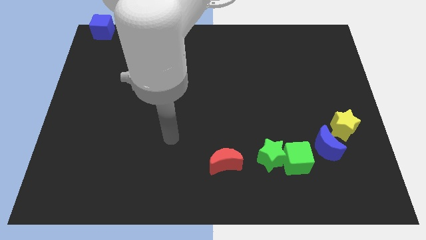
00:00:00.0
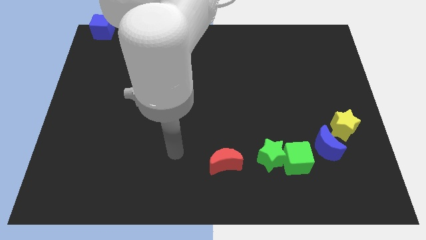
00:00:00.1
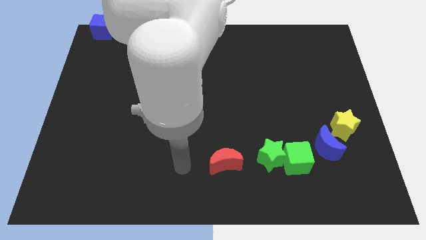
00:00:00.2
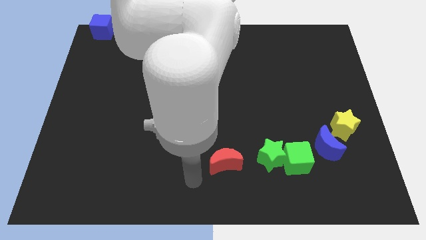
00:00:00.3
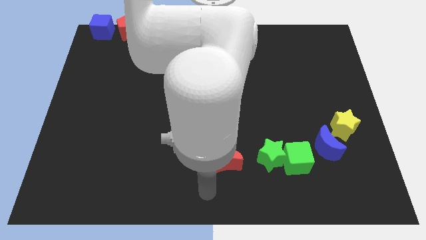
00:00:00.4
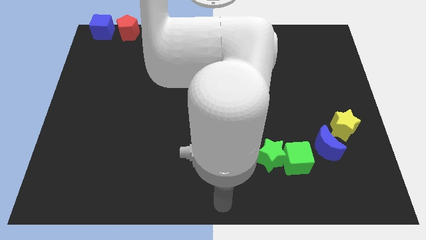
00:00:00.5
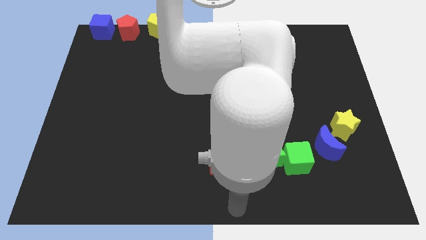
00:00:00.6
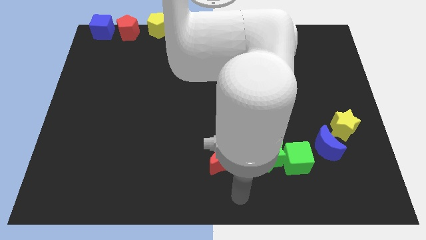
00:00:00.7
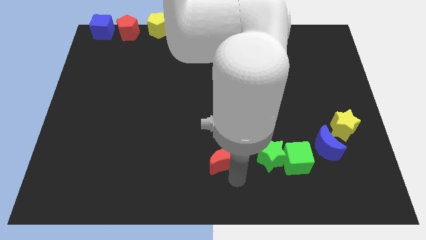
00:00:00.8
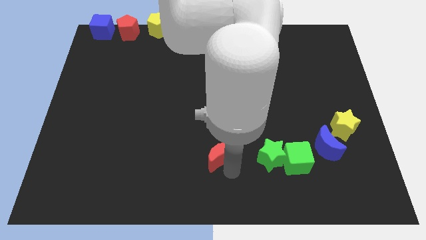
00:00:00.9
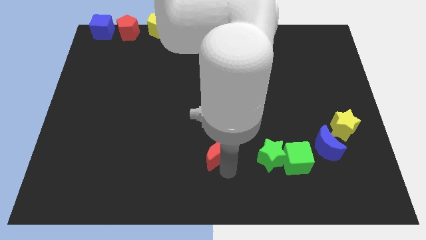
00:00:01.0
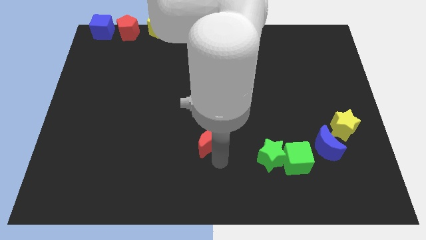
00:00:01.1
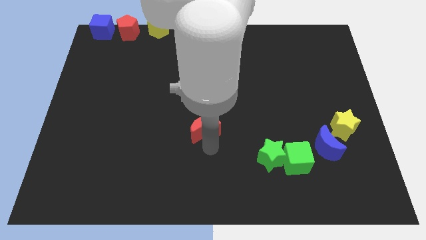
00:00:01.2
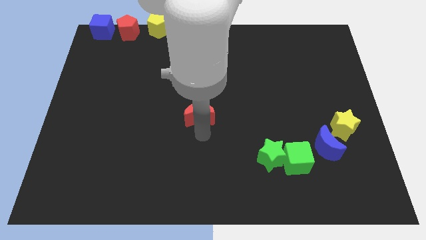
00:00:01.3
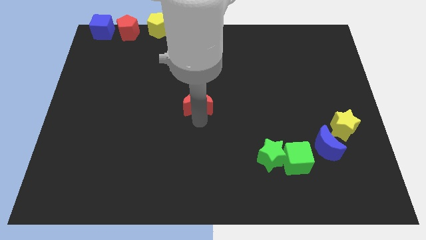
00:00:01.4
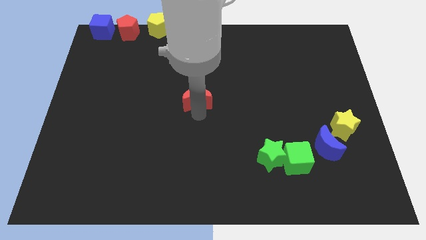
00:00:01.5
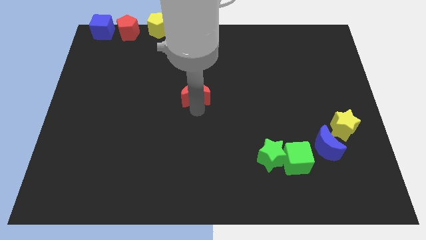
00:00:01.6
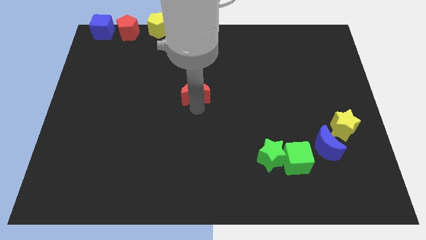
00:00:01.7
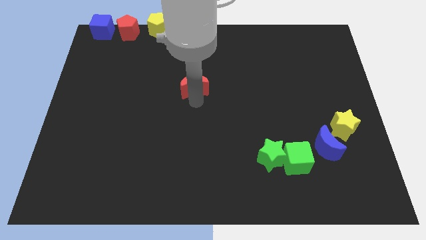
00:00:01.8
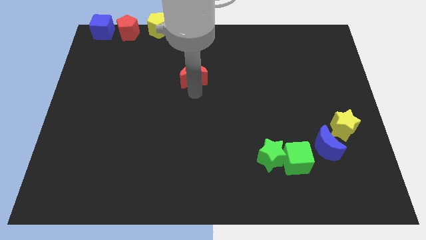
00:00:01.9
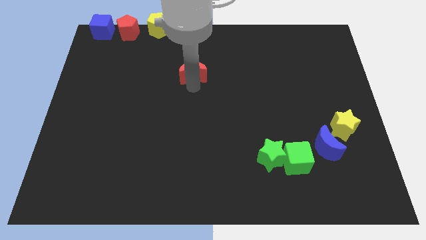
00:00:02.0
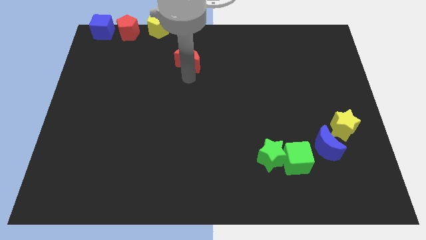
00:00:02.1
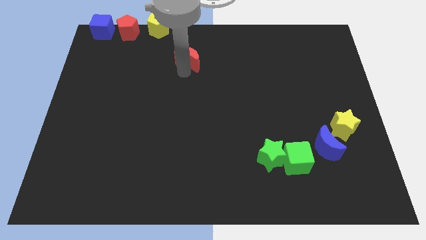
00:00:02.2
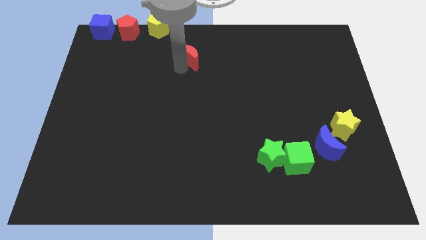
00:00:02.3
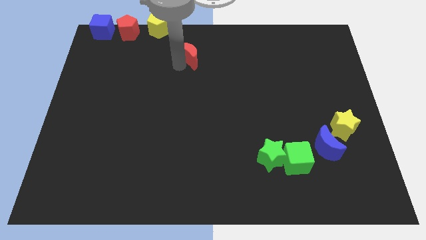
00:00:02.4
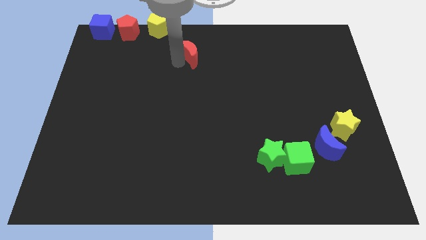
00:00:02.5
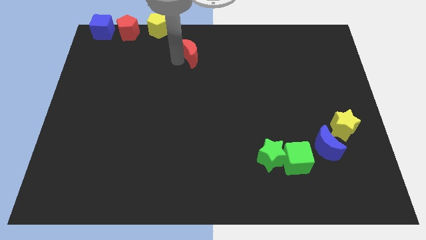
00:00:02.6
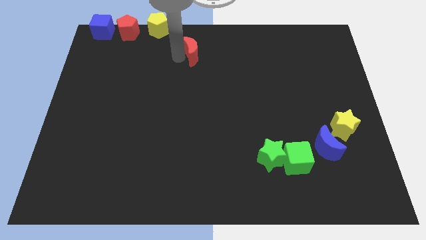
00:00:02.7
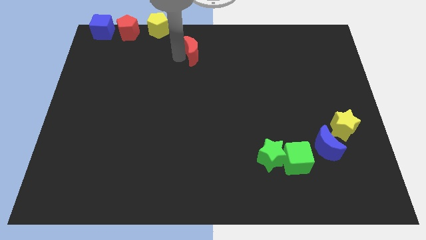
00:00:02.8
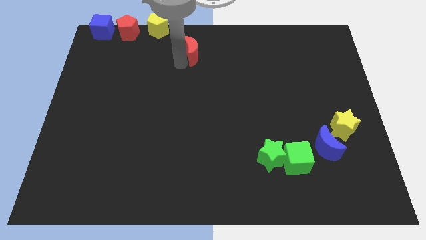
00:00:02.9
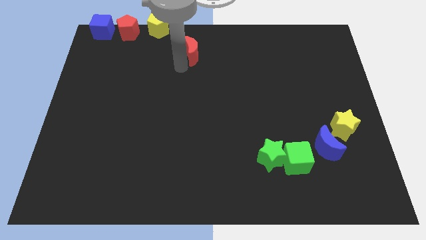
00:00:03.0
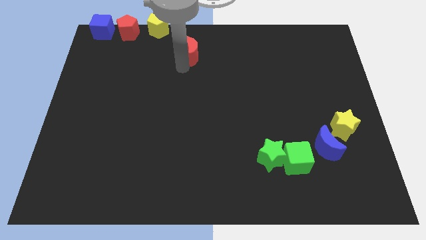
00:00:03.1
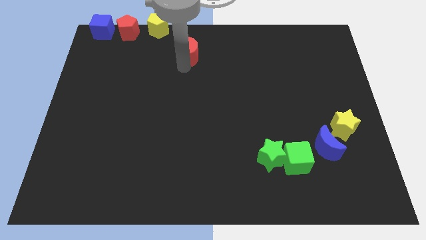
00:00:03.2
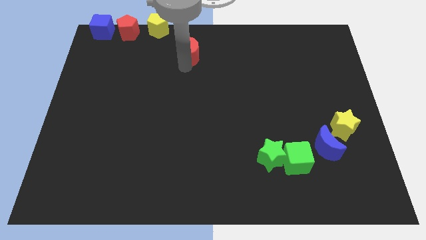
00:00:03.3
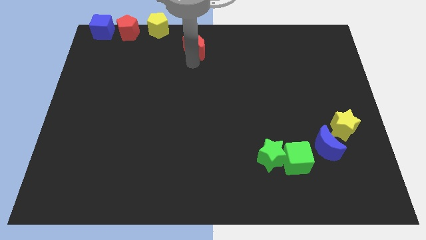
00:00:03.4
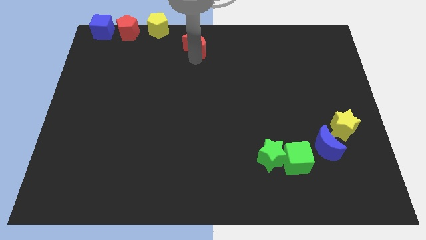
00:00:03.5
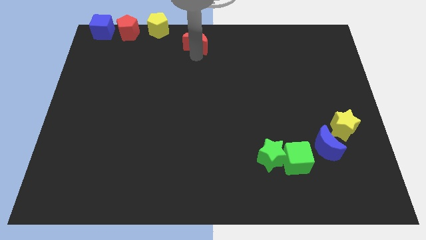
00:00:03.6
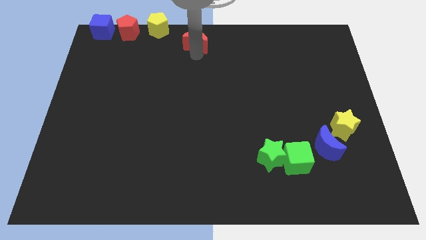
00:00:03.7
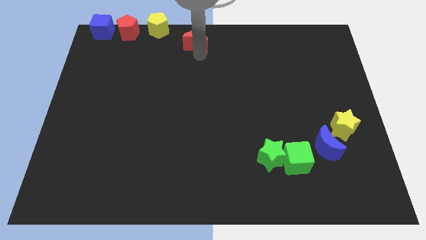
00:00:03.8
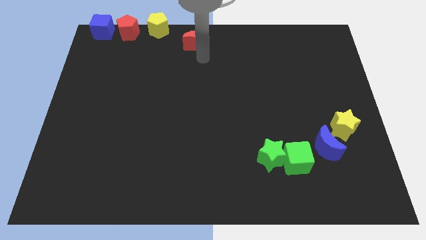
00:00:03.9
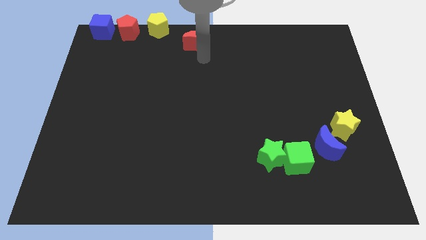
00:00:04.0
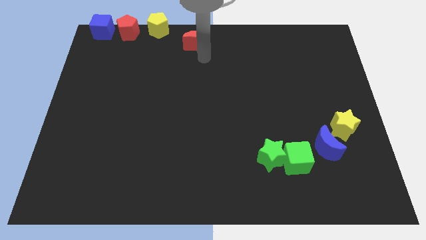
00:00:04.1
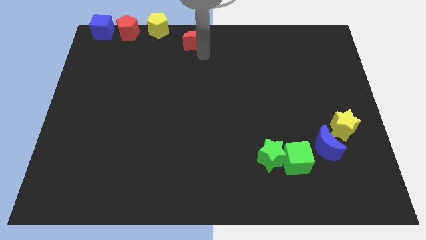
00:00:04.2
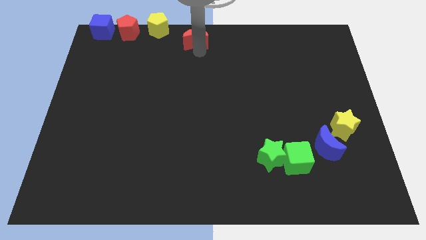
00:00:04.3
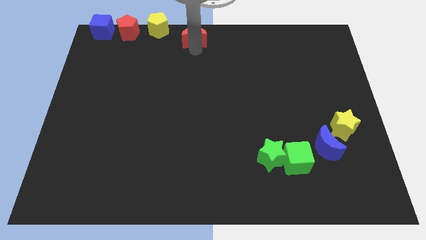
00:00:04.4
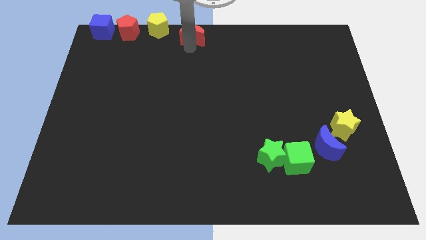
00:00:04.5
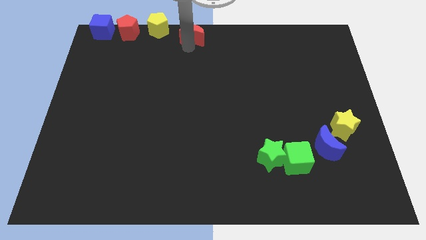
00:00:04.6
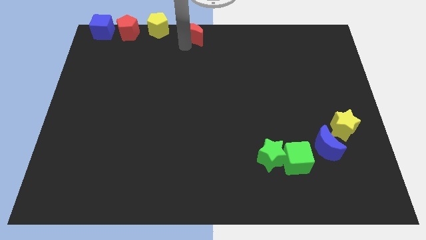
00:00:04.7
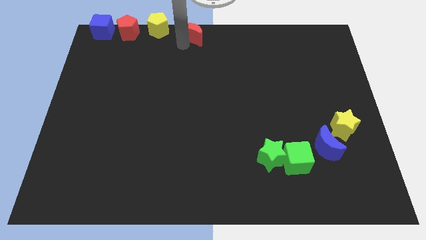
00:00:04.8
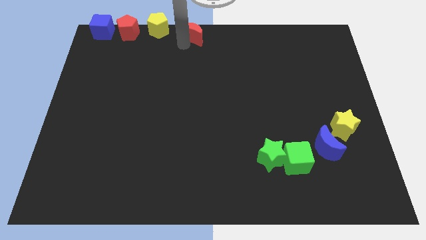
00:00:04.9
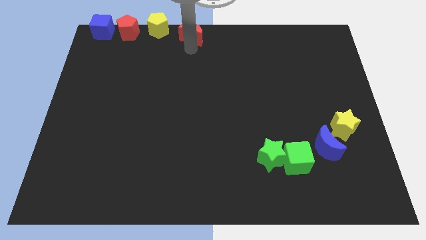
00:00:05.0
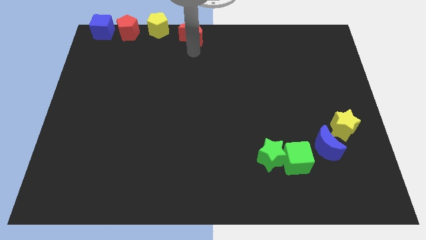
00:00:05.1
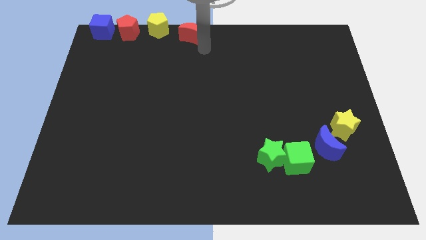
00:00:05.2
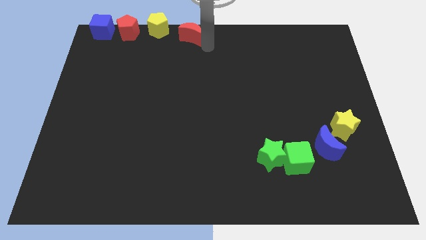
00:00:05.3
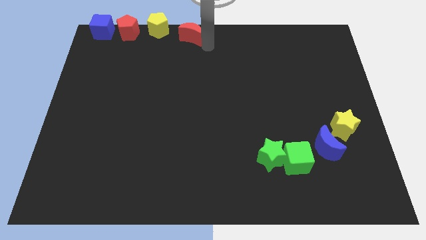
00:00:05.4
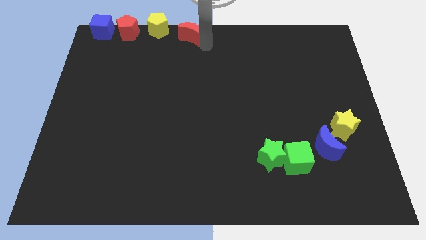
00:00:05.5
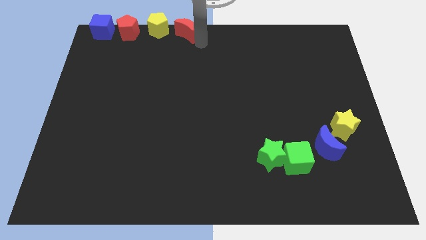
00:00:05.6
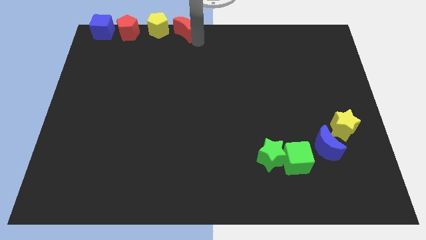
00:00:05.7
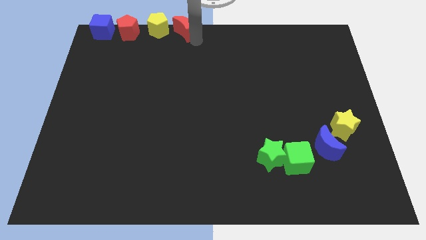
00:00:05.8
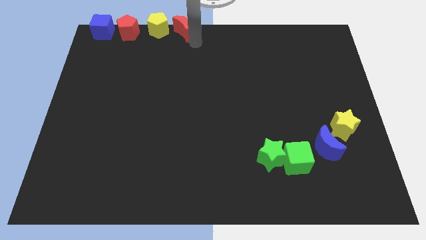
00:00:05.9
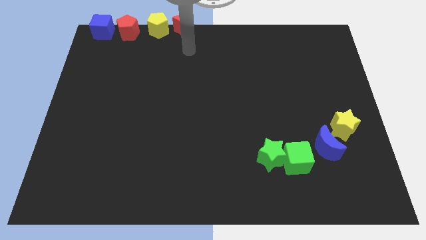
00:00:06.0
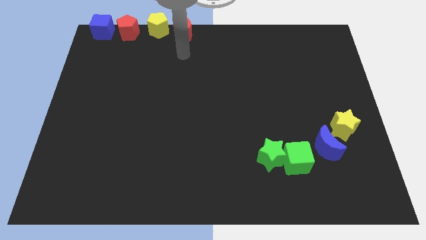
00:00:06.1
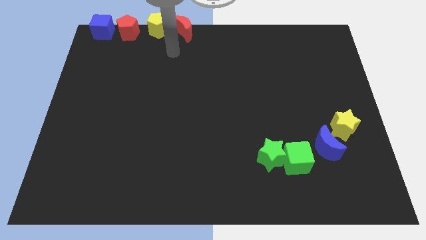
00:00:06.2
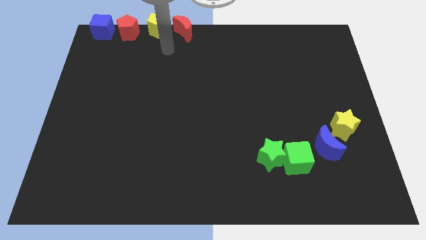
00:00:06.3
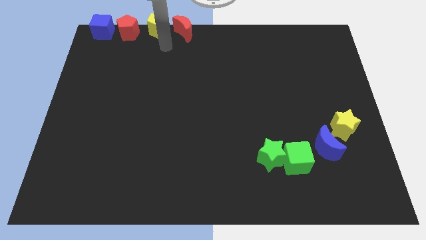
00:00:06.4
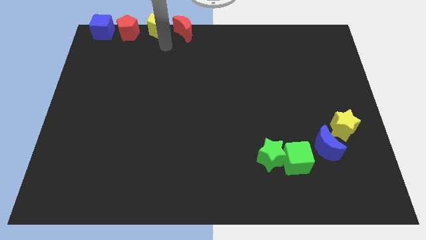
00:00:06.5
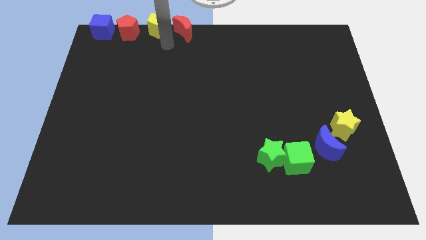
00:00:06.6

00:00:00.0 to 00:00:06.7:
move the red crescent right to the yellow pentagon

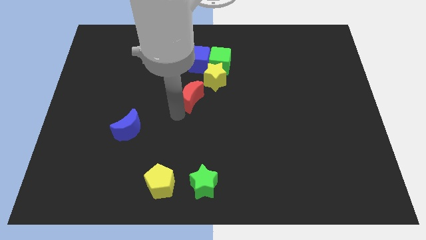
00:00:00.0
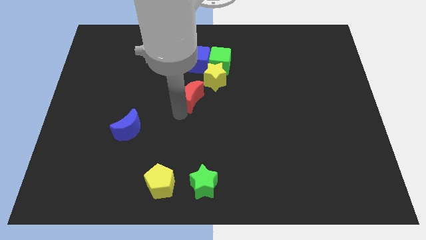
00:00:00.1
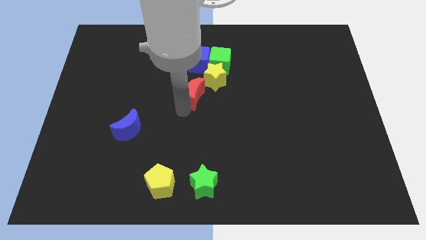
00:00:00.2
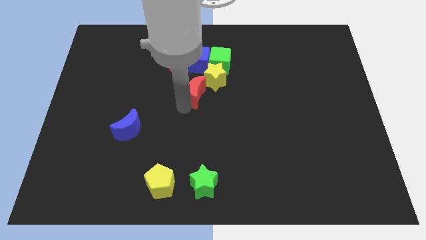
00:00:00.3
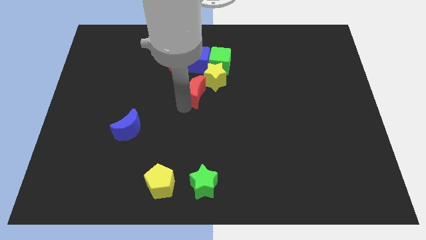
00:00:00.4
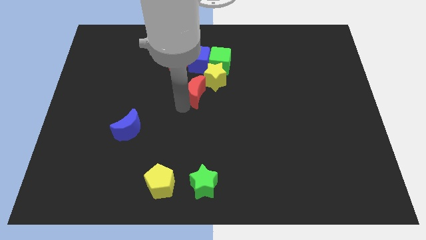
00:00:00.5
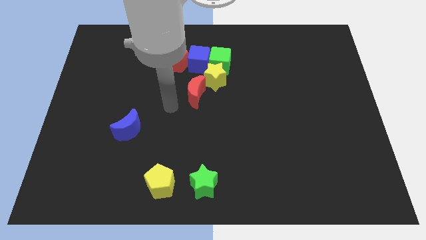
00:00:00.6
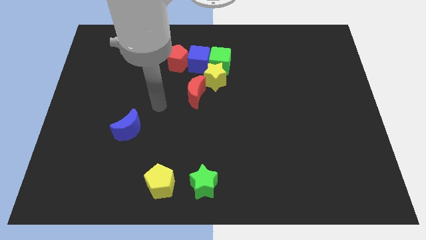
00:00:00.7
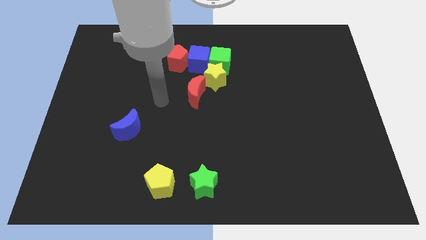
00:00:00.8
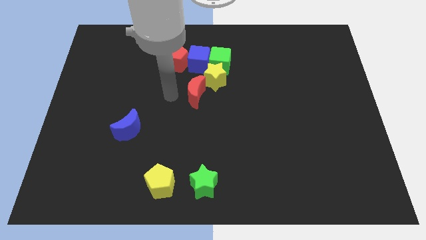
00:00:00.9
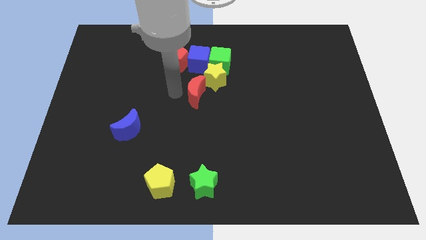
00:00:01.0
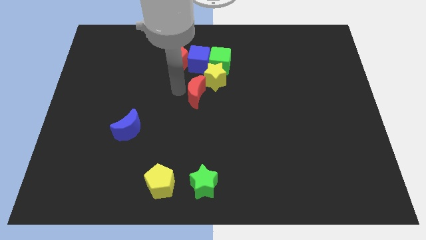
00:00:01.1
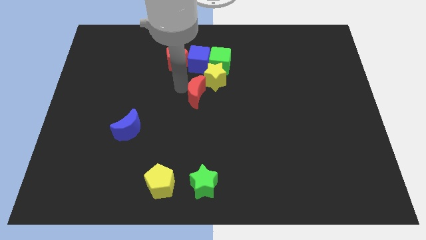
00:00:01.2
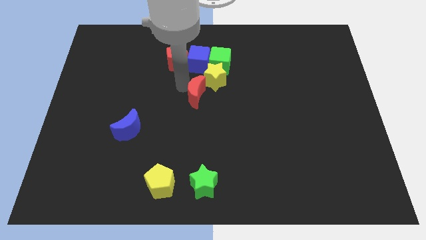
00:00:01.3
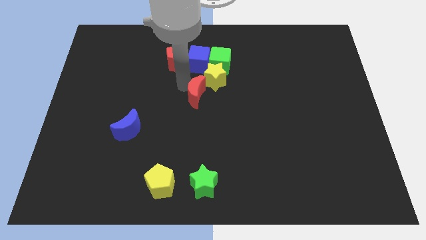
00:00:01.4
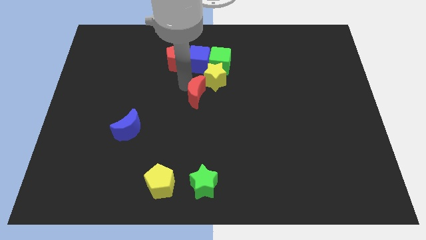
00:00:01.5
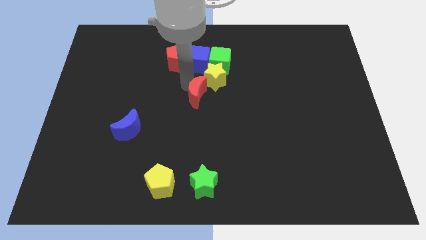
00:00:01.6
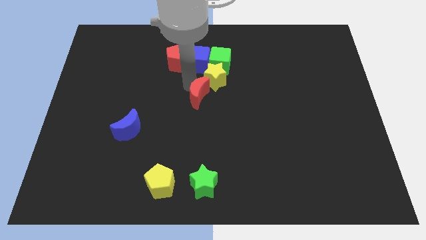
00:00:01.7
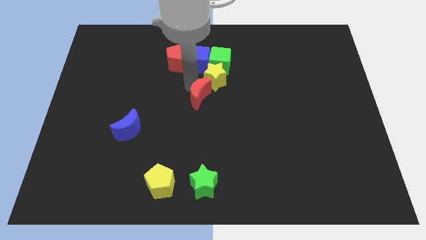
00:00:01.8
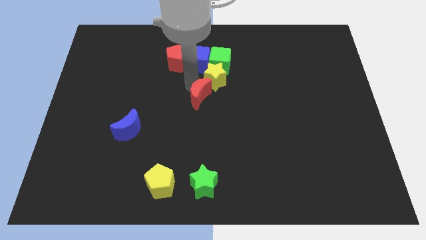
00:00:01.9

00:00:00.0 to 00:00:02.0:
push the red moon to the bottom of yellow star

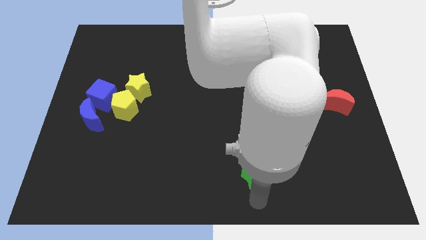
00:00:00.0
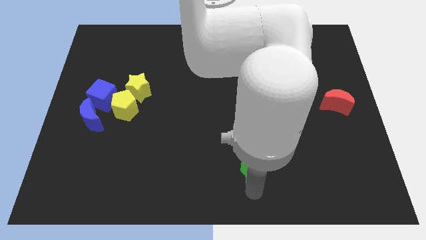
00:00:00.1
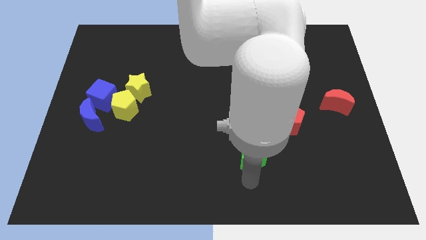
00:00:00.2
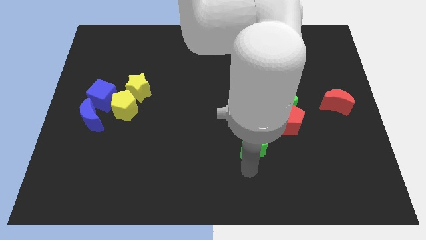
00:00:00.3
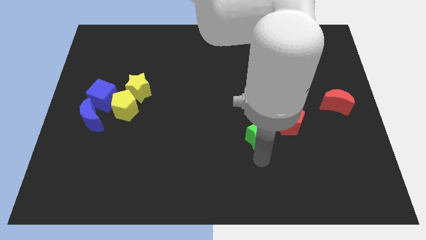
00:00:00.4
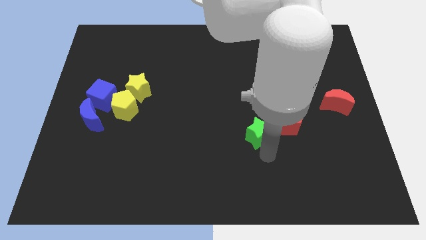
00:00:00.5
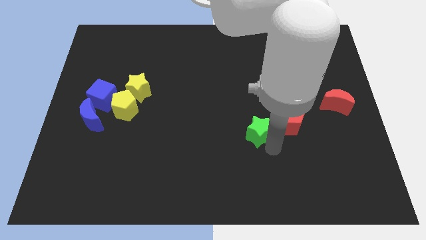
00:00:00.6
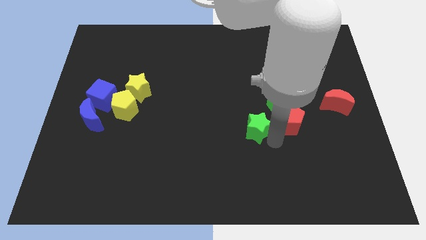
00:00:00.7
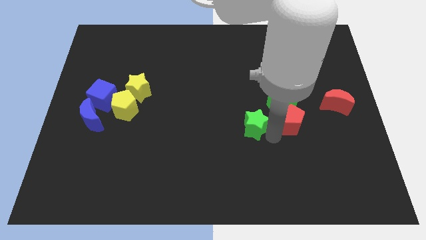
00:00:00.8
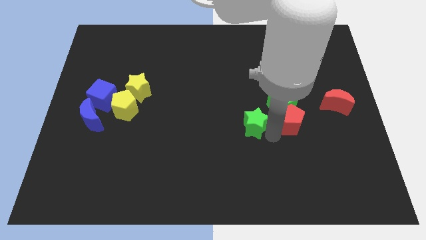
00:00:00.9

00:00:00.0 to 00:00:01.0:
place the green star to left side of the red pentagon
